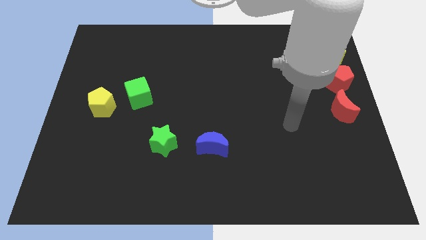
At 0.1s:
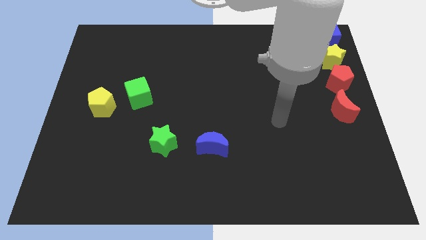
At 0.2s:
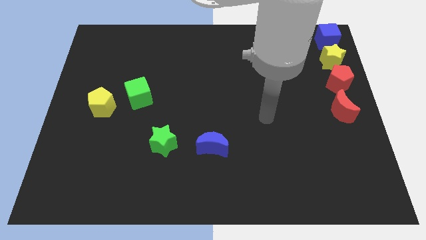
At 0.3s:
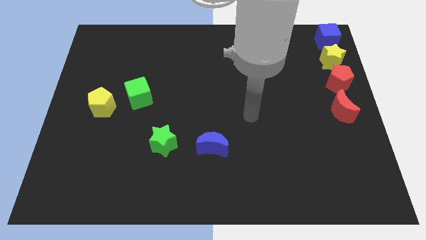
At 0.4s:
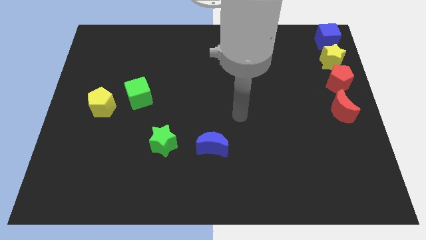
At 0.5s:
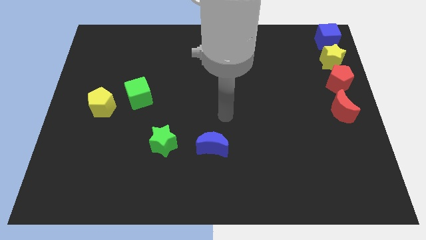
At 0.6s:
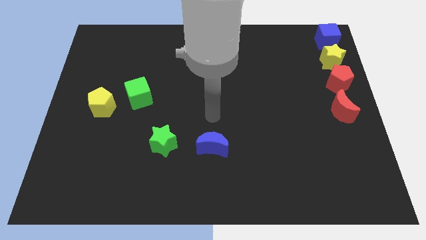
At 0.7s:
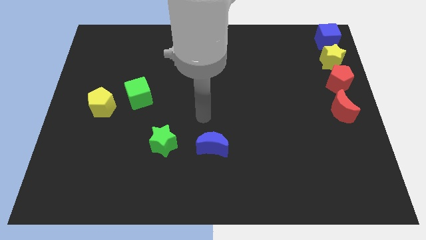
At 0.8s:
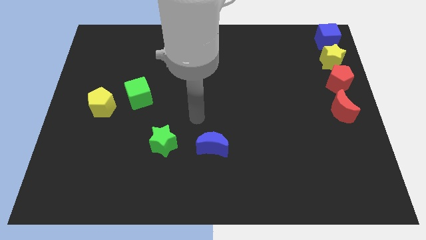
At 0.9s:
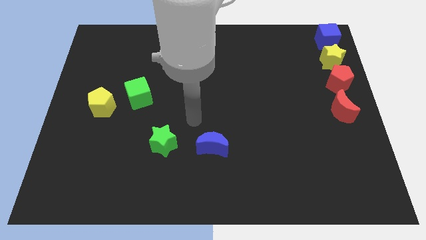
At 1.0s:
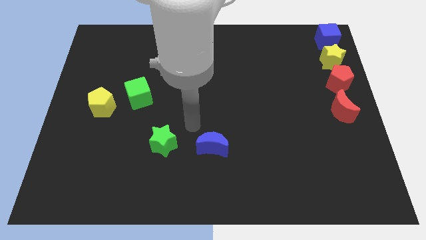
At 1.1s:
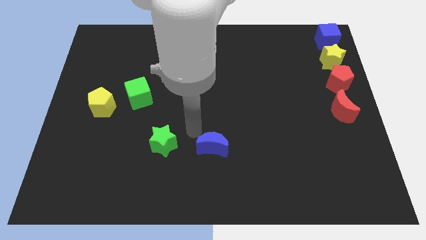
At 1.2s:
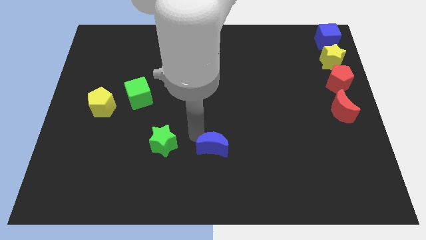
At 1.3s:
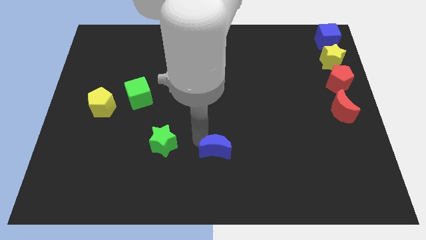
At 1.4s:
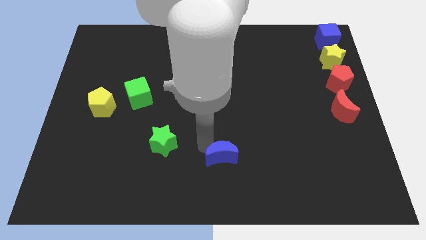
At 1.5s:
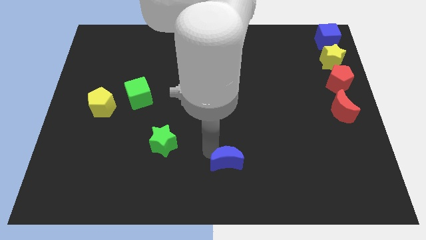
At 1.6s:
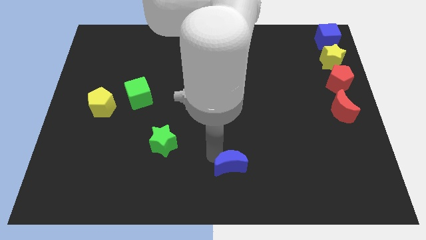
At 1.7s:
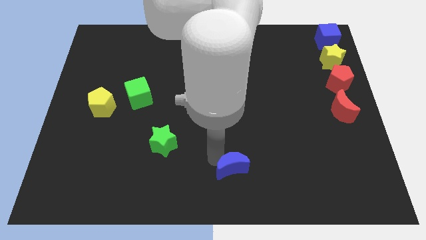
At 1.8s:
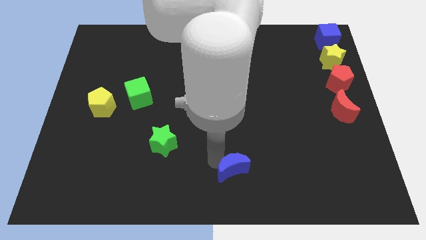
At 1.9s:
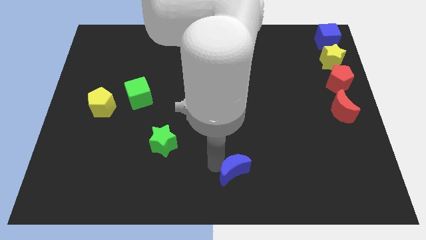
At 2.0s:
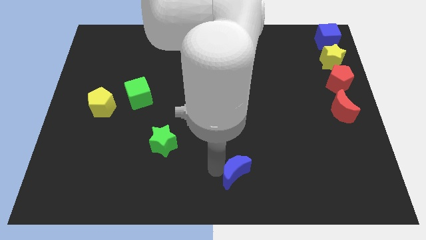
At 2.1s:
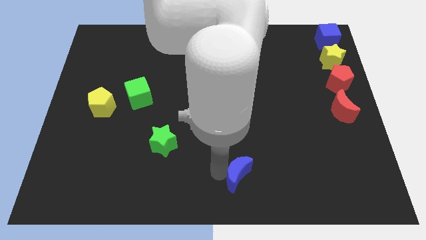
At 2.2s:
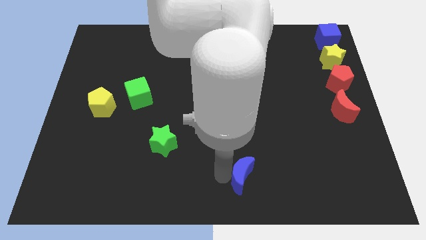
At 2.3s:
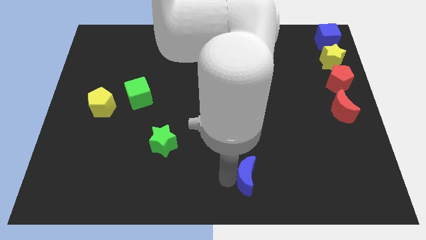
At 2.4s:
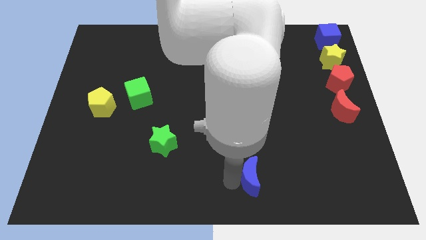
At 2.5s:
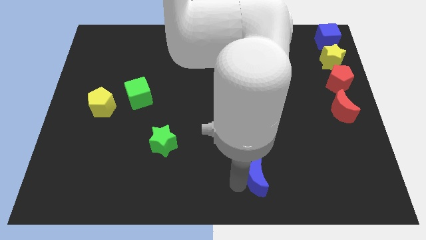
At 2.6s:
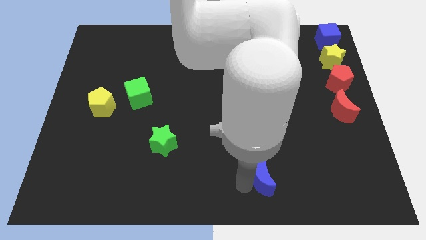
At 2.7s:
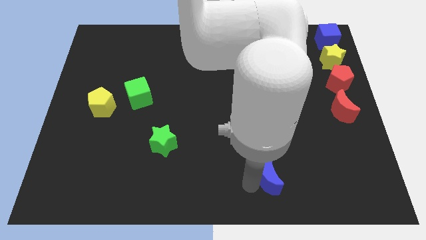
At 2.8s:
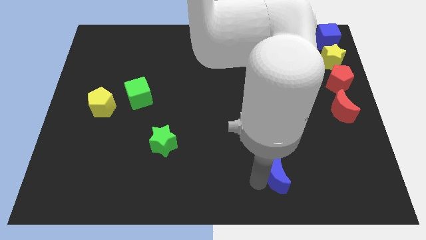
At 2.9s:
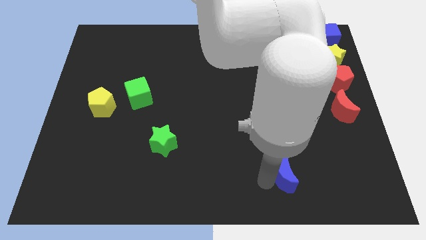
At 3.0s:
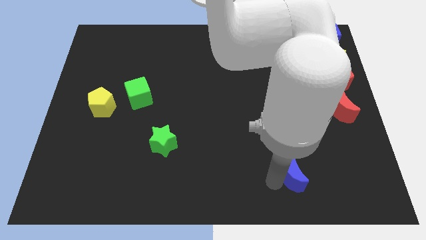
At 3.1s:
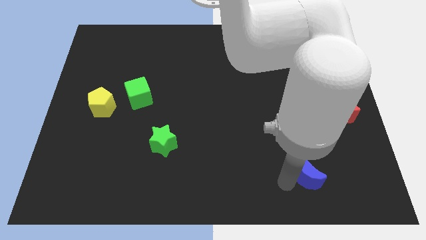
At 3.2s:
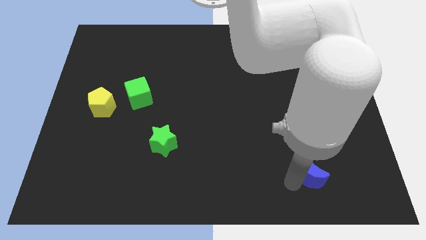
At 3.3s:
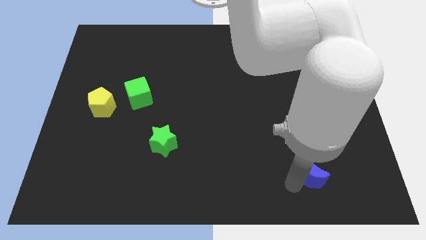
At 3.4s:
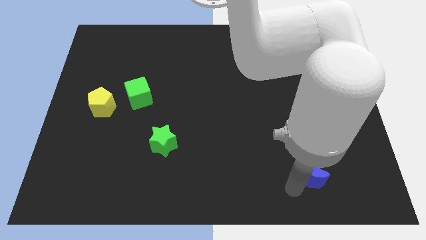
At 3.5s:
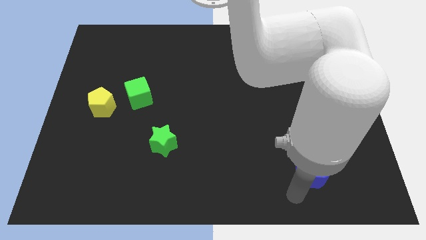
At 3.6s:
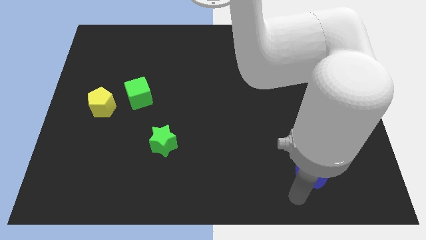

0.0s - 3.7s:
slide the blue moon diagonally bottom right to the green star

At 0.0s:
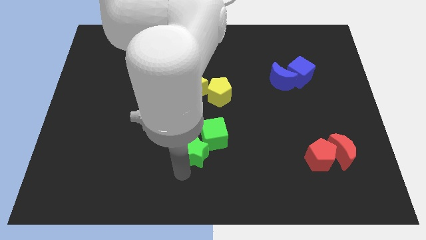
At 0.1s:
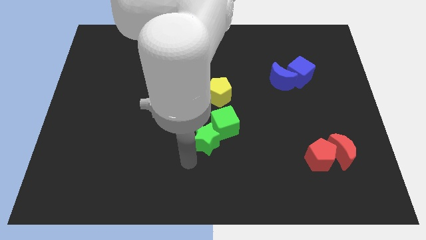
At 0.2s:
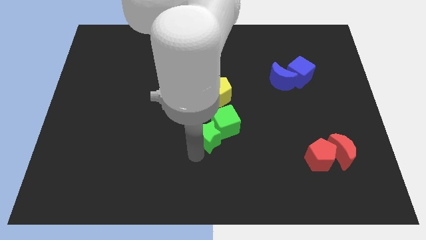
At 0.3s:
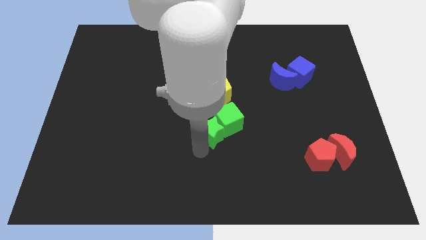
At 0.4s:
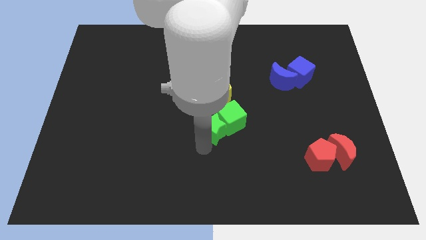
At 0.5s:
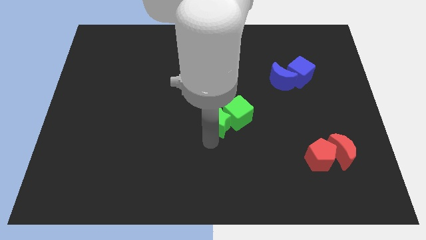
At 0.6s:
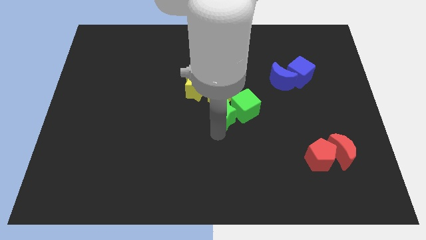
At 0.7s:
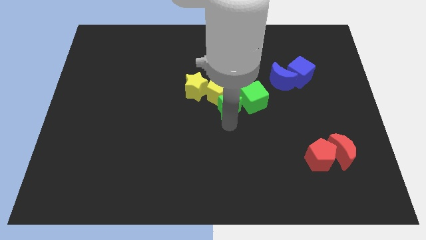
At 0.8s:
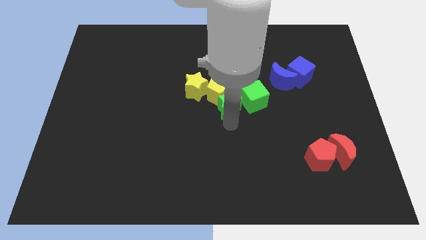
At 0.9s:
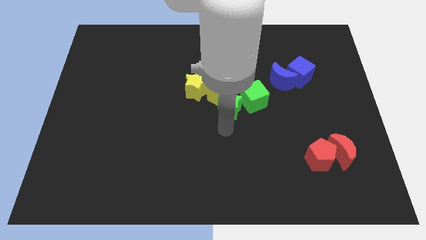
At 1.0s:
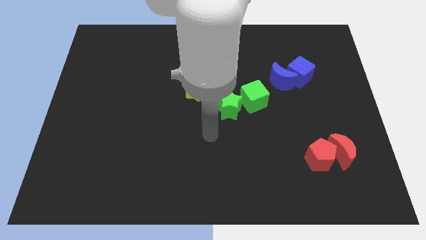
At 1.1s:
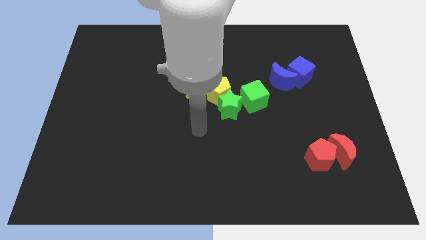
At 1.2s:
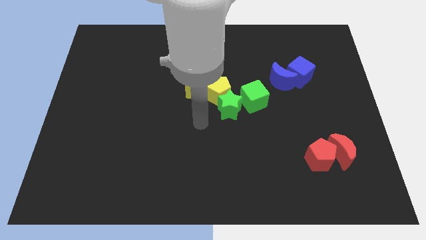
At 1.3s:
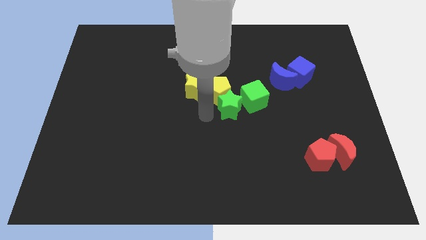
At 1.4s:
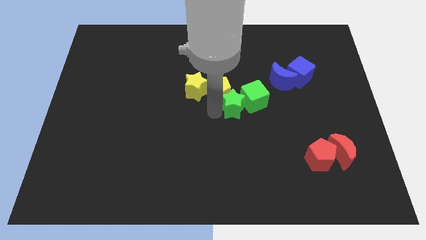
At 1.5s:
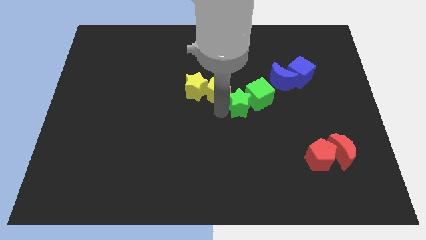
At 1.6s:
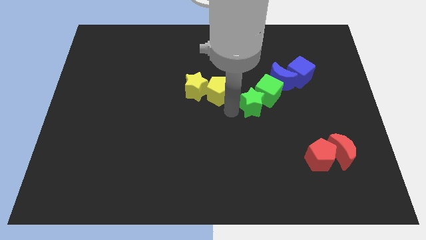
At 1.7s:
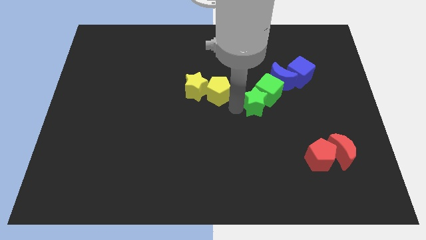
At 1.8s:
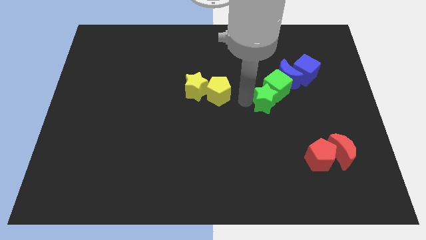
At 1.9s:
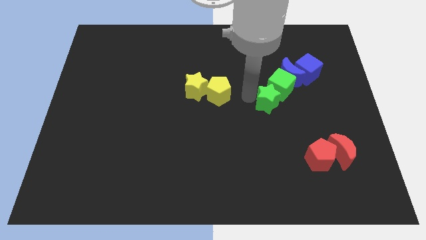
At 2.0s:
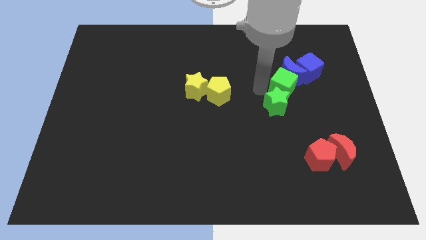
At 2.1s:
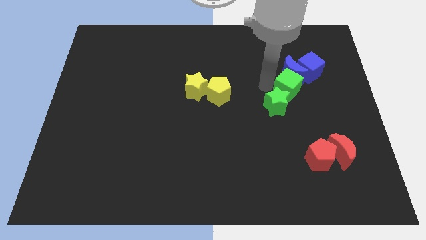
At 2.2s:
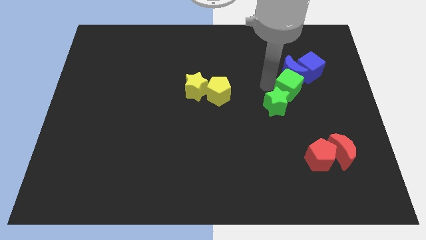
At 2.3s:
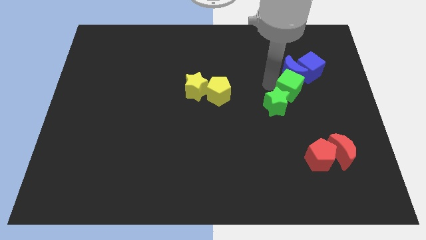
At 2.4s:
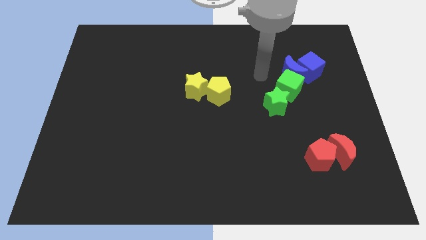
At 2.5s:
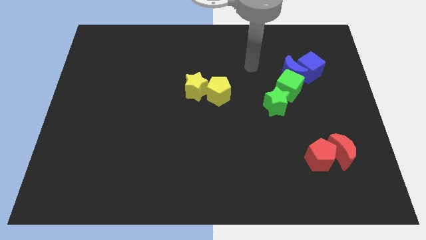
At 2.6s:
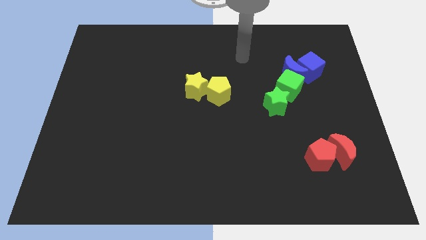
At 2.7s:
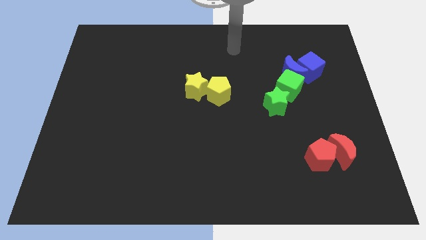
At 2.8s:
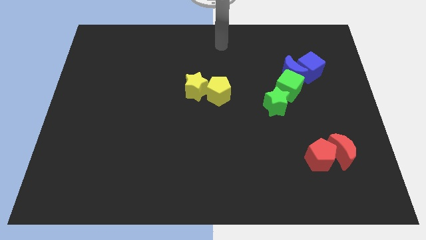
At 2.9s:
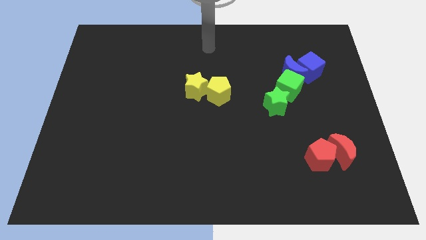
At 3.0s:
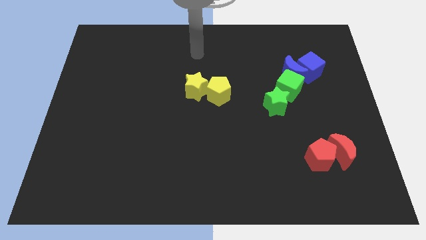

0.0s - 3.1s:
push the green cube with green star into the blue crescent

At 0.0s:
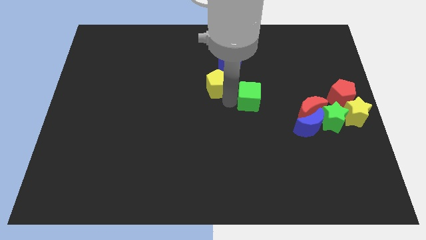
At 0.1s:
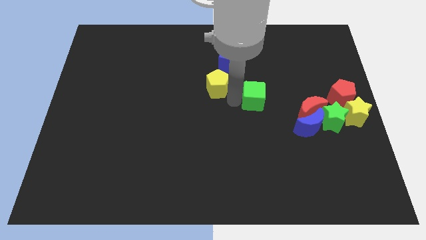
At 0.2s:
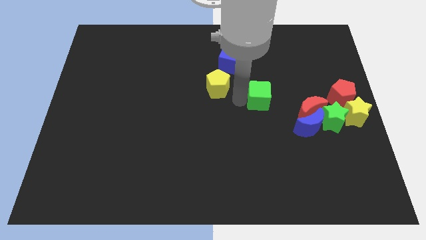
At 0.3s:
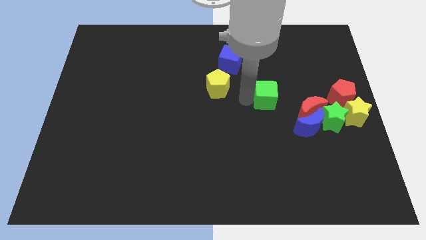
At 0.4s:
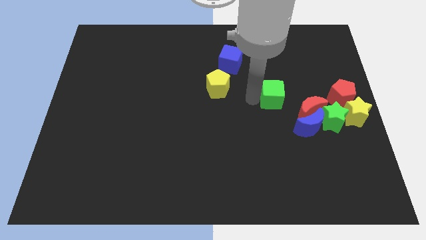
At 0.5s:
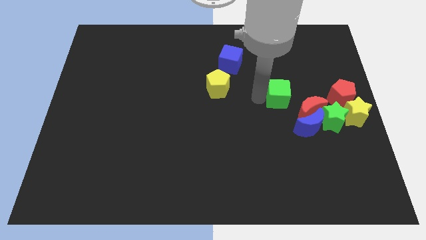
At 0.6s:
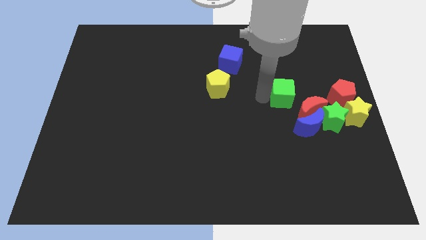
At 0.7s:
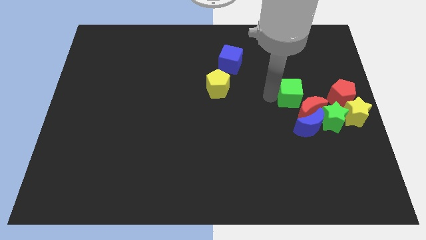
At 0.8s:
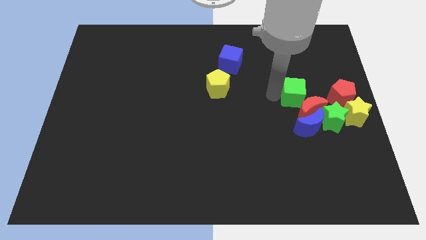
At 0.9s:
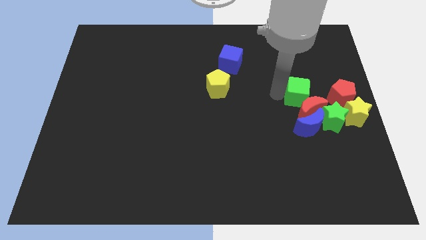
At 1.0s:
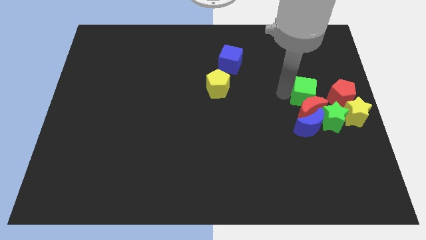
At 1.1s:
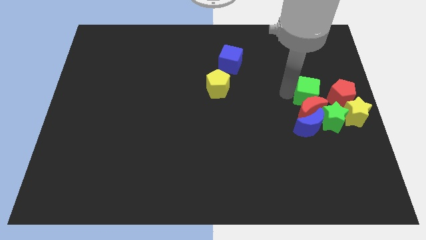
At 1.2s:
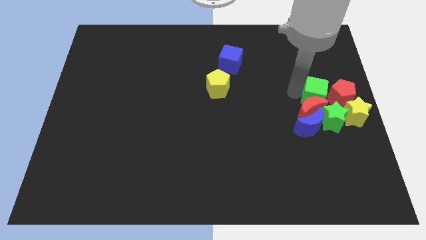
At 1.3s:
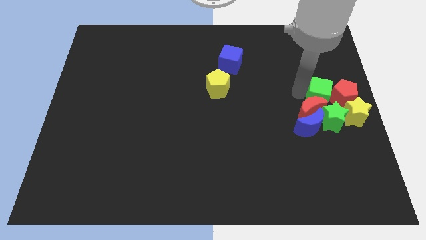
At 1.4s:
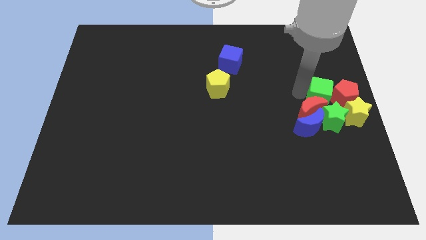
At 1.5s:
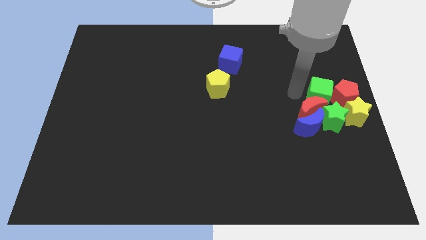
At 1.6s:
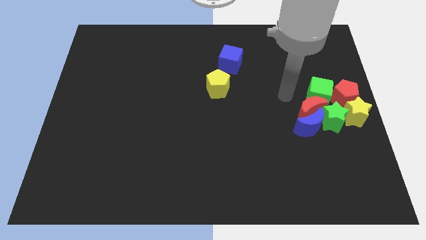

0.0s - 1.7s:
push the green cube into the red pentagon

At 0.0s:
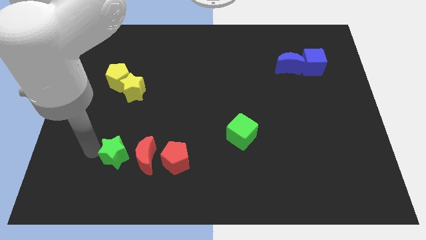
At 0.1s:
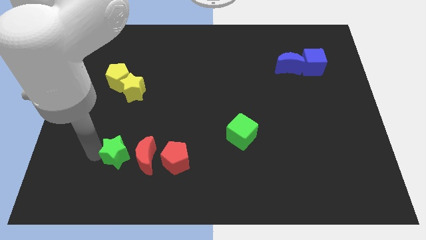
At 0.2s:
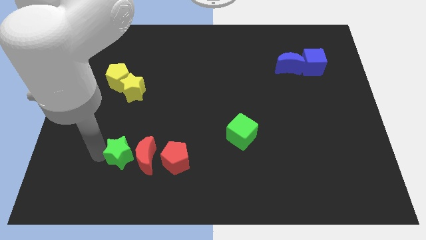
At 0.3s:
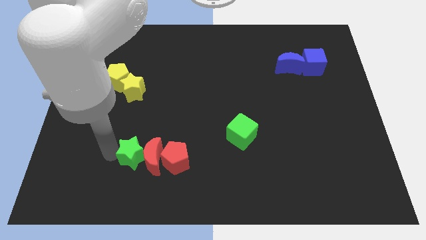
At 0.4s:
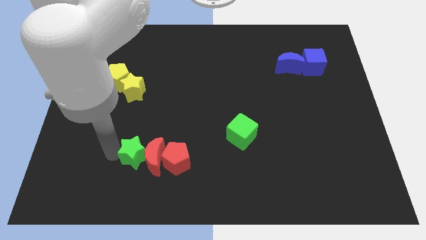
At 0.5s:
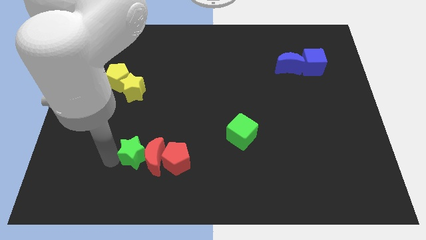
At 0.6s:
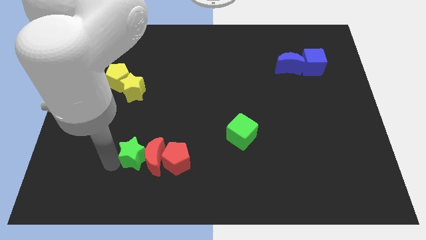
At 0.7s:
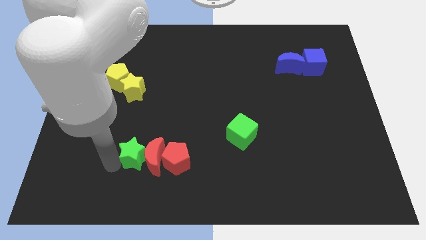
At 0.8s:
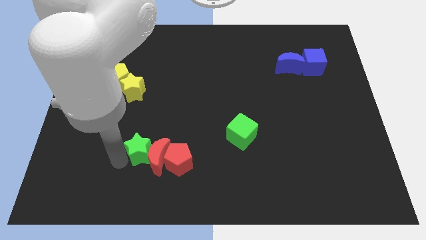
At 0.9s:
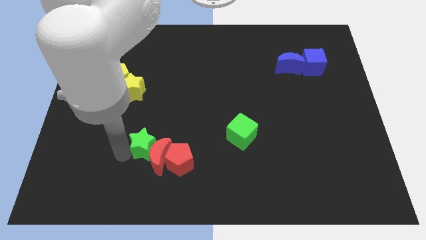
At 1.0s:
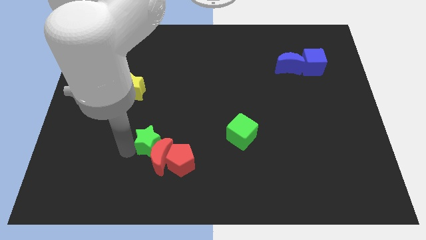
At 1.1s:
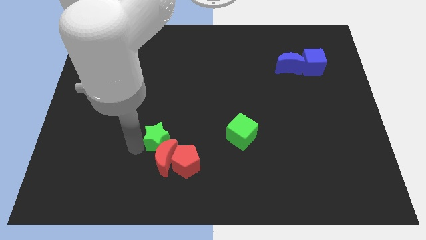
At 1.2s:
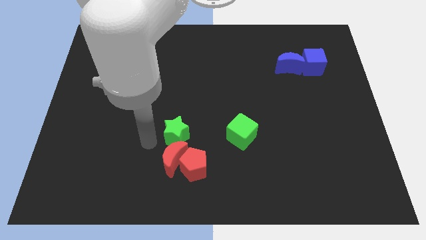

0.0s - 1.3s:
push the green star to the top of the red crescent
